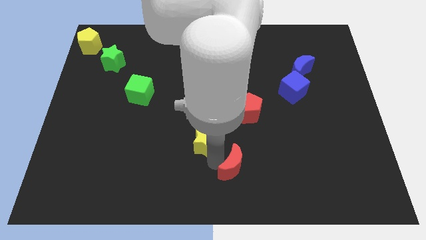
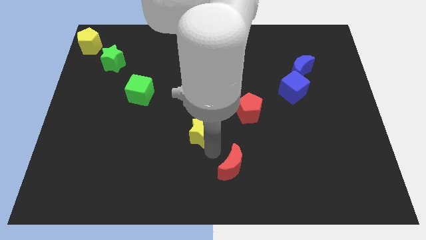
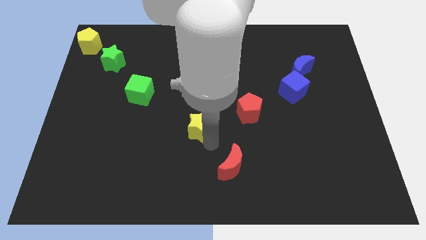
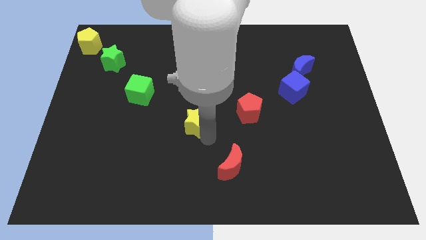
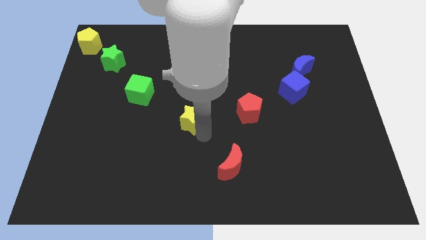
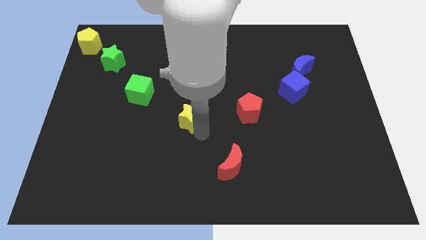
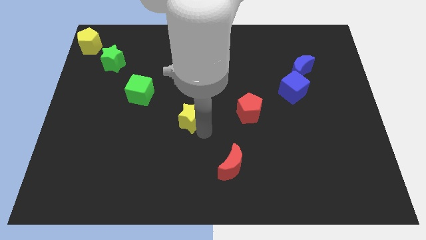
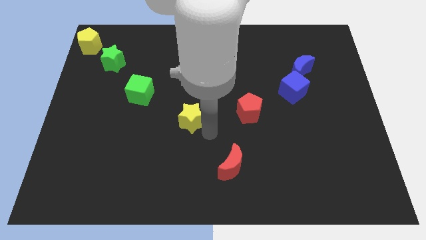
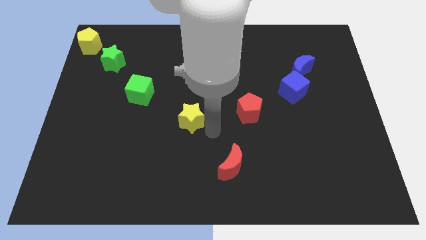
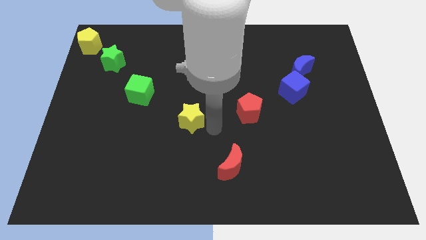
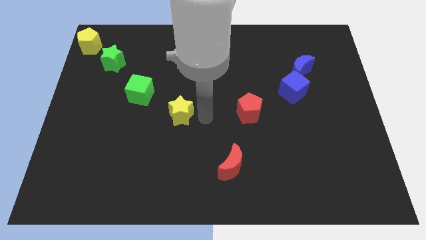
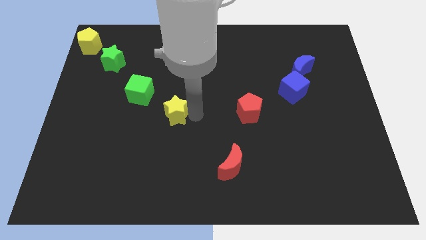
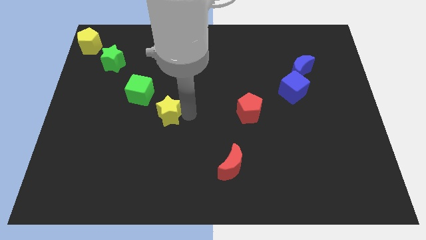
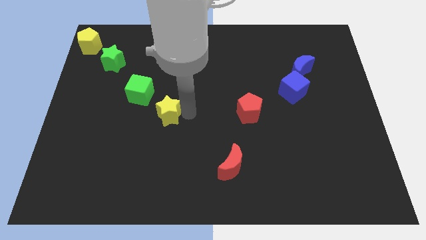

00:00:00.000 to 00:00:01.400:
place the yellow star diagonally to red moon

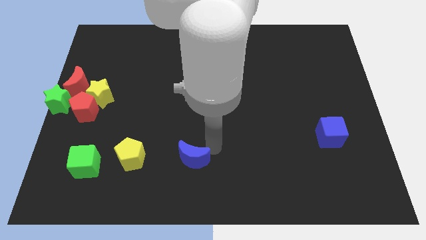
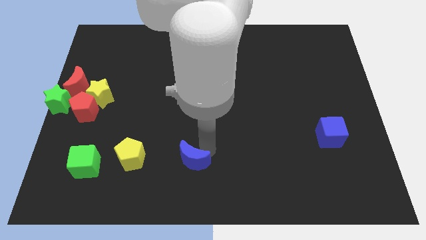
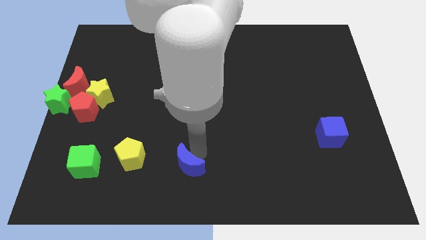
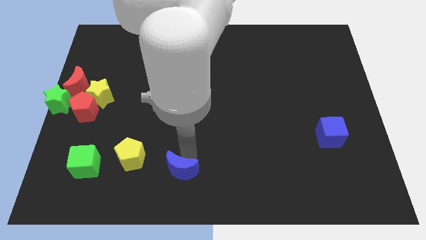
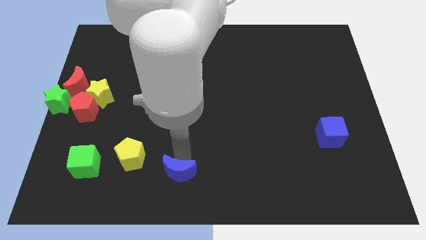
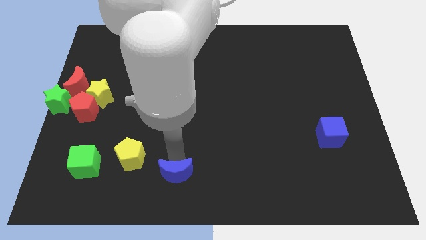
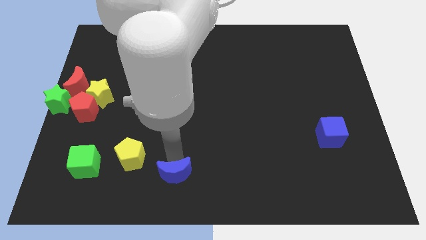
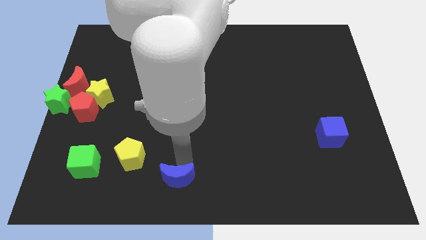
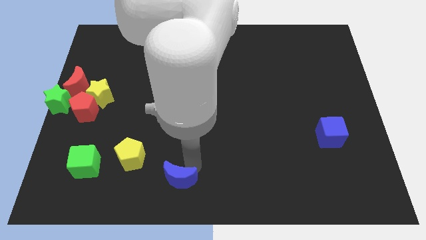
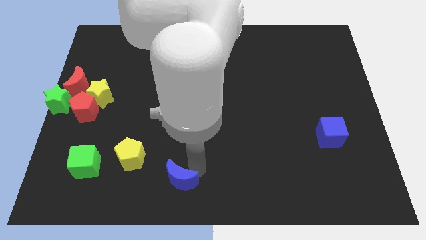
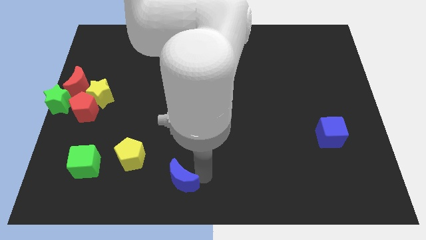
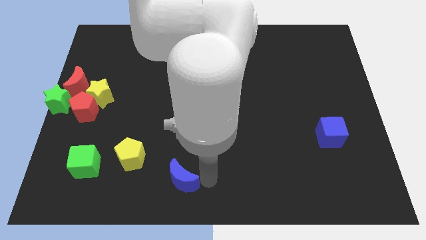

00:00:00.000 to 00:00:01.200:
push the blue crescent towards the bottom center of the board

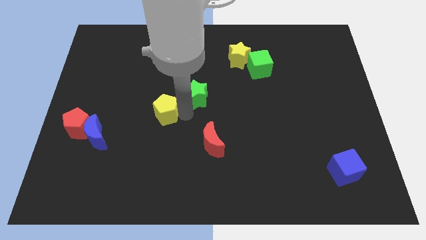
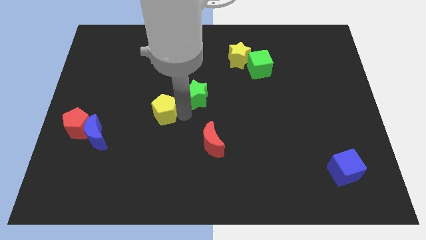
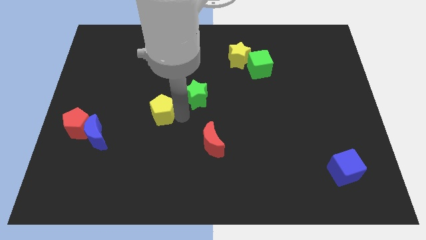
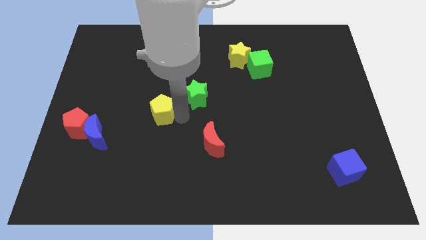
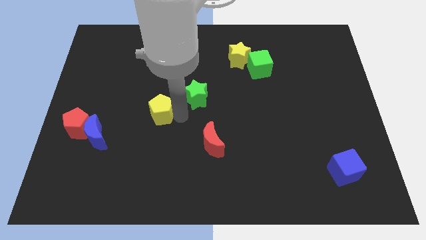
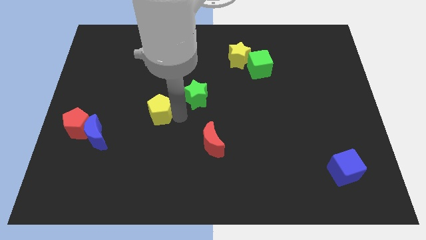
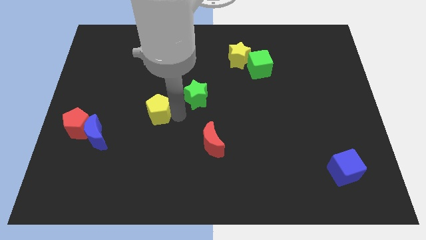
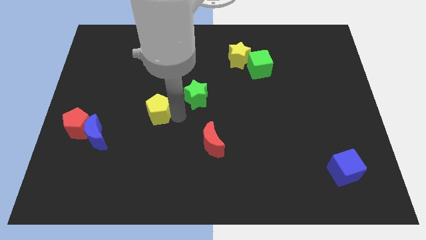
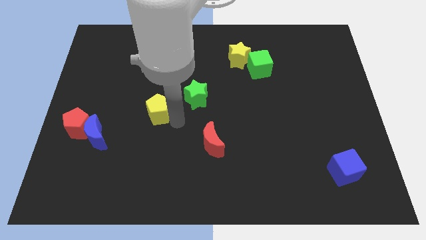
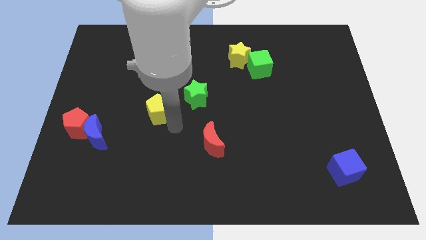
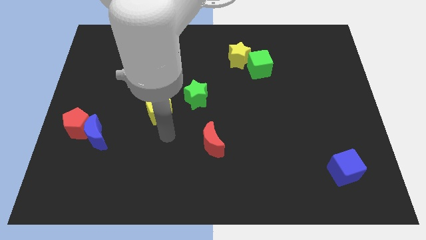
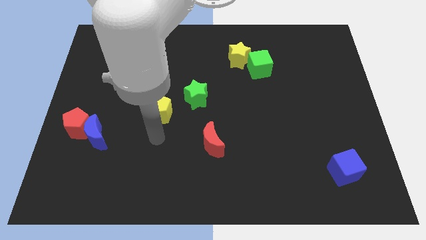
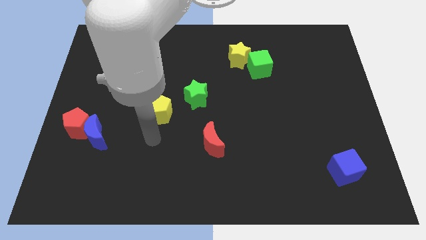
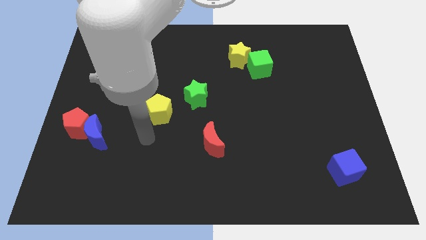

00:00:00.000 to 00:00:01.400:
slide the yellow pentagon slightly to the left

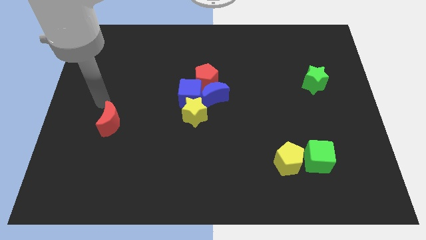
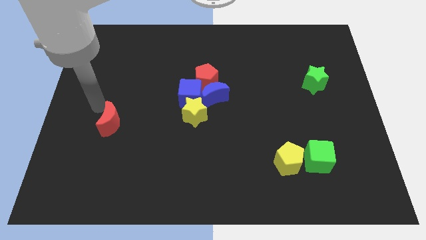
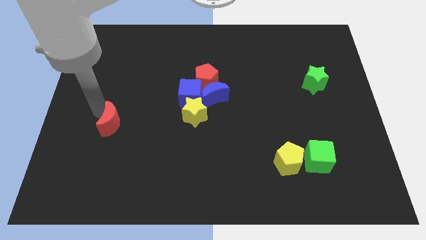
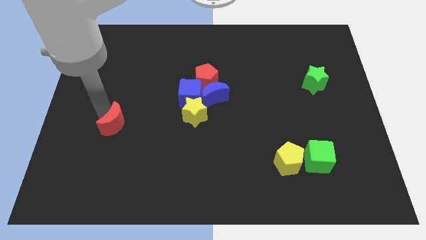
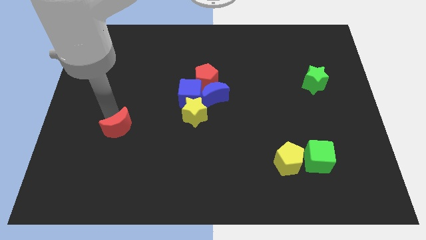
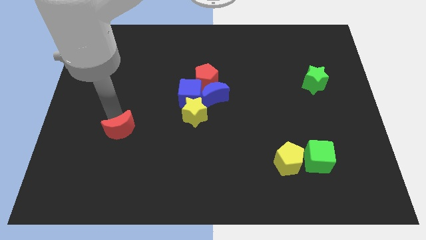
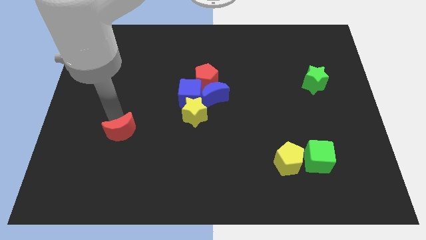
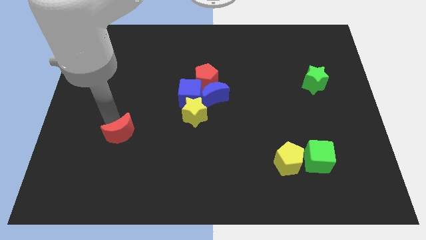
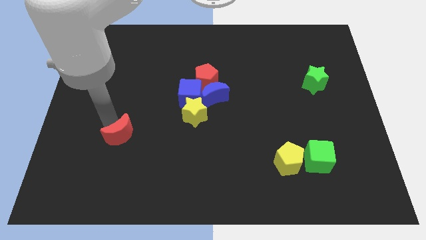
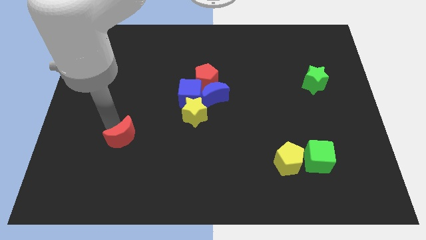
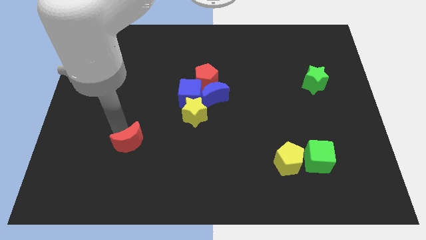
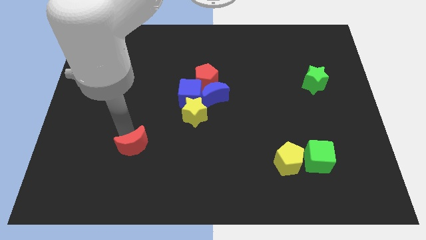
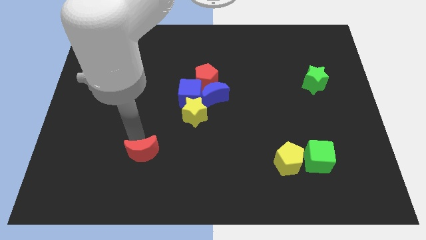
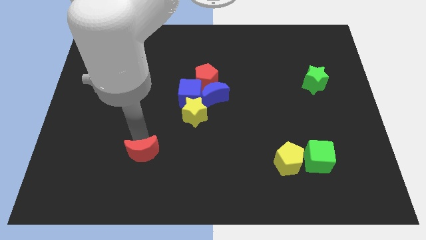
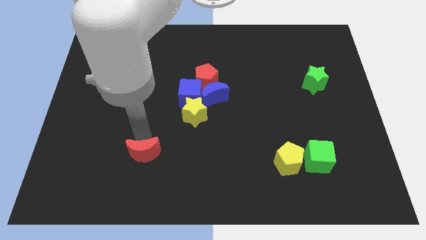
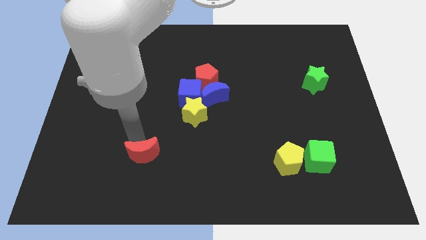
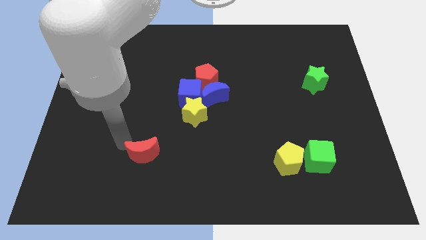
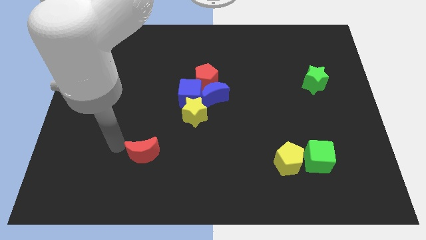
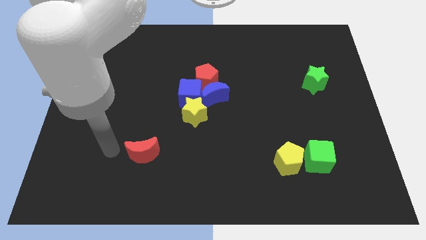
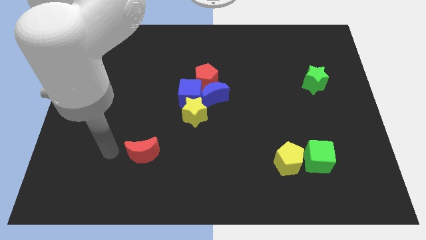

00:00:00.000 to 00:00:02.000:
put the red crescent to the left side of the yellow pentagon

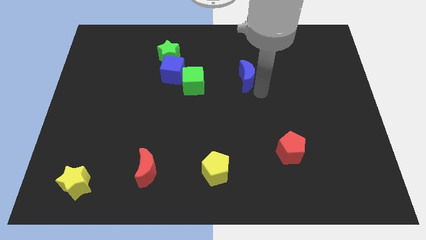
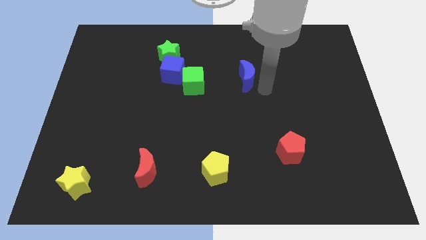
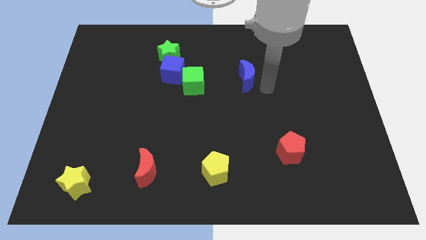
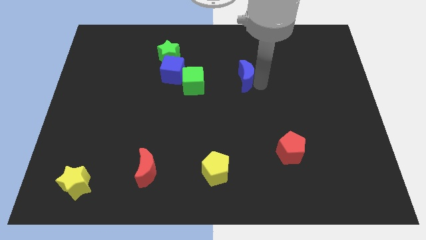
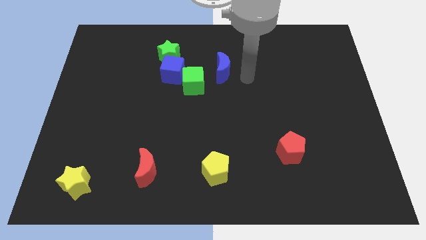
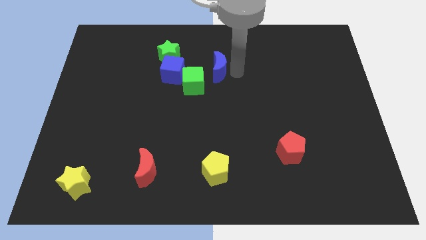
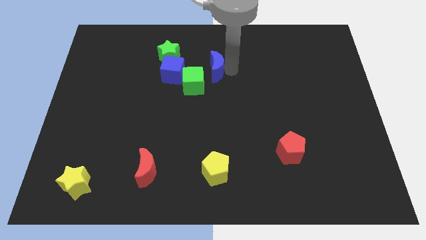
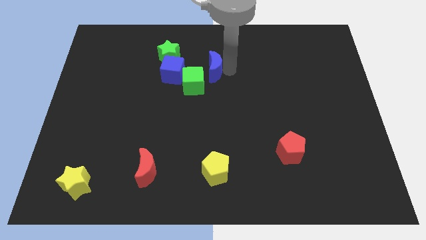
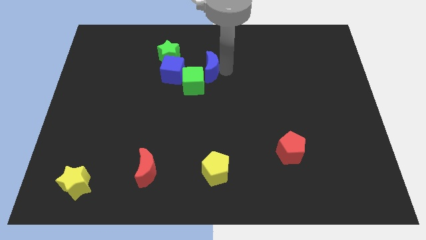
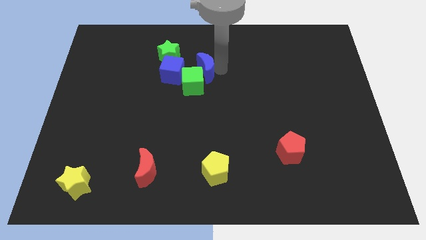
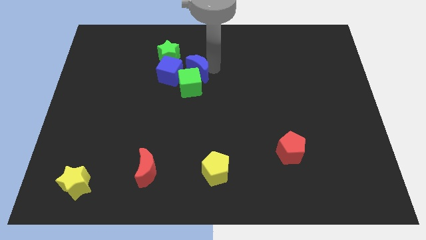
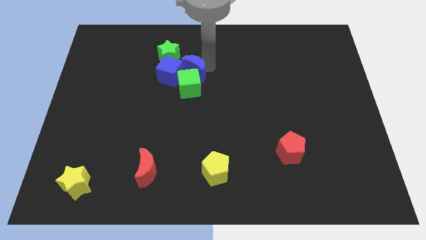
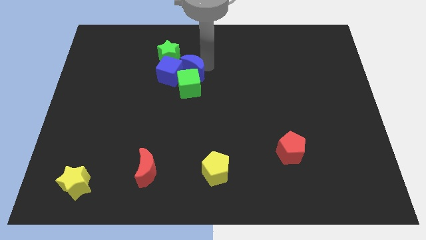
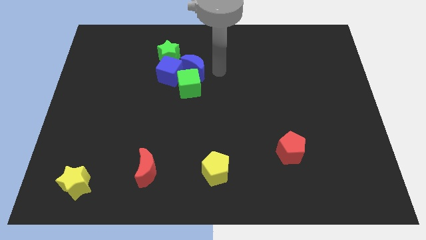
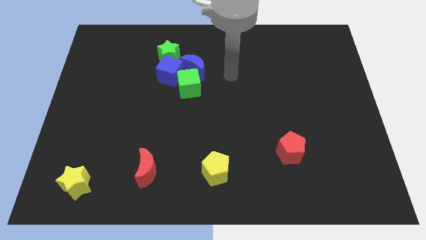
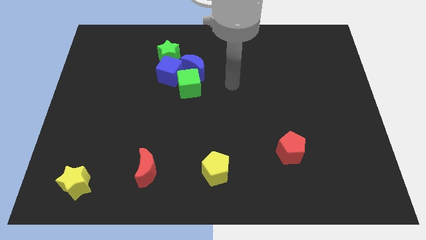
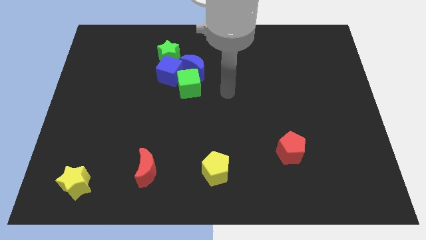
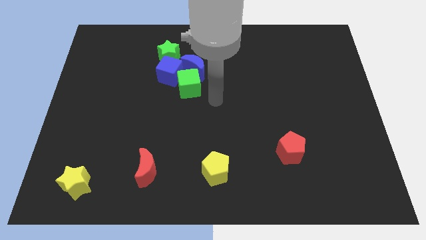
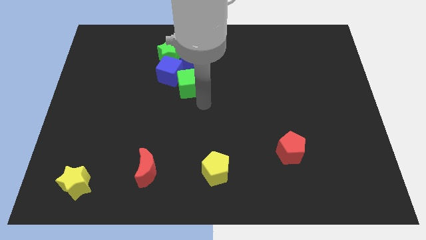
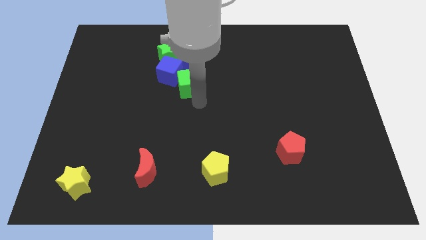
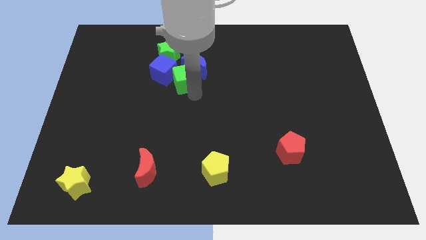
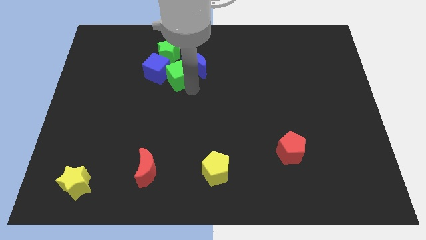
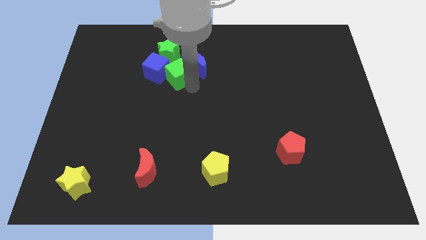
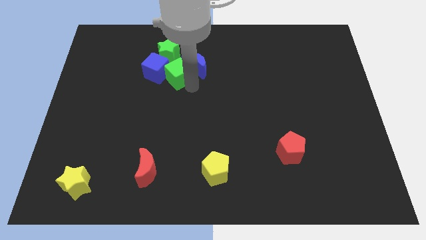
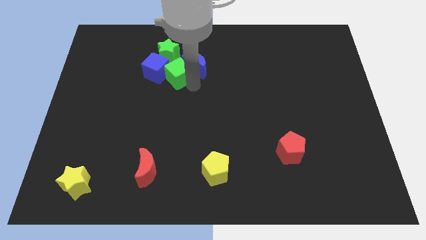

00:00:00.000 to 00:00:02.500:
place green cube below green star

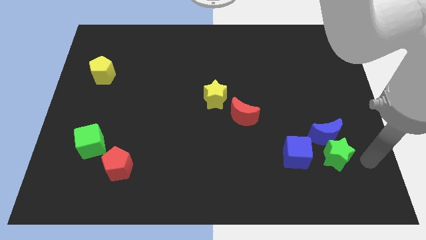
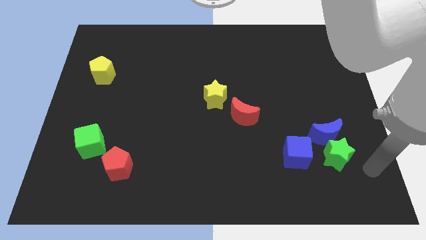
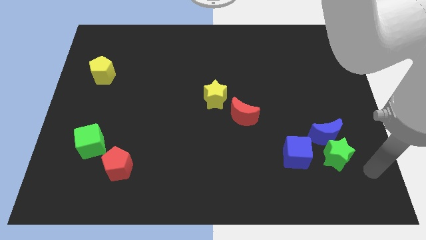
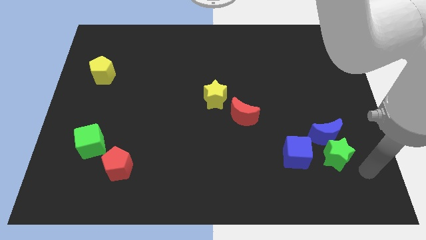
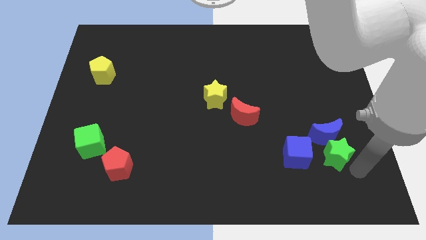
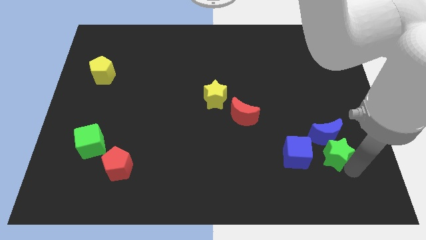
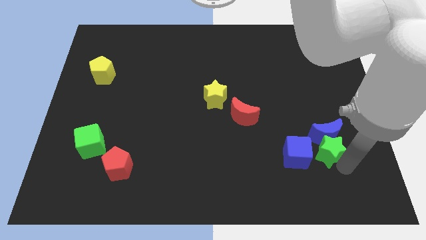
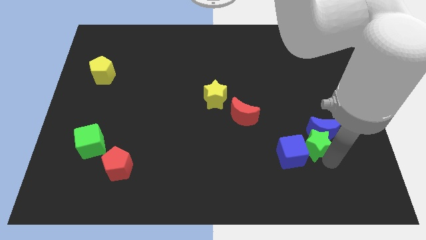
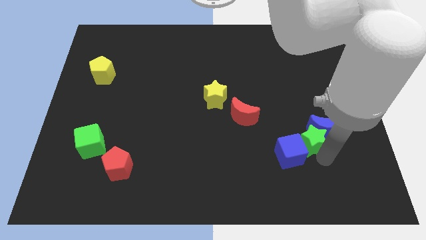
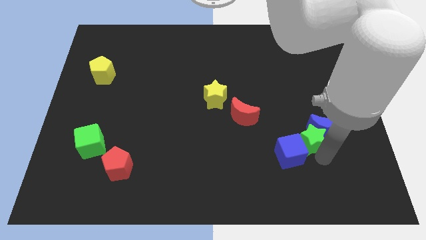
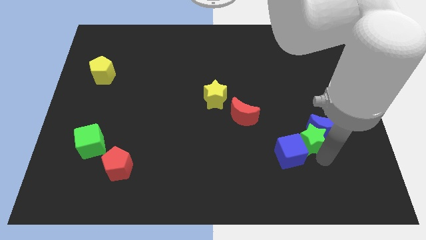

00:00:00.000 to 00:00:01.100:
place the green star in between the blue blocks
